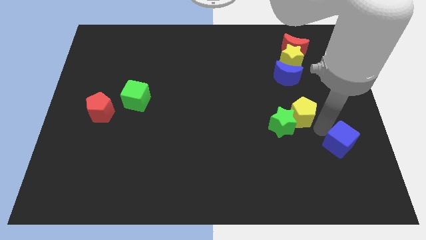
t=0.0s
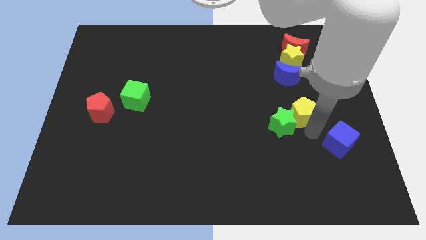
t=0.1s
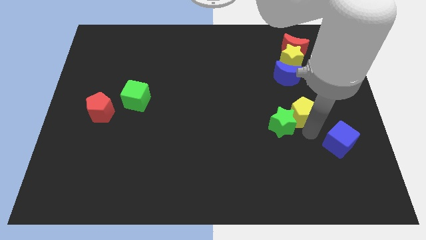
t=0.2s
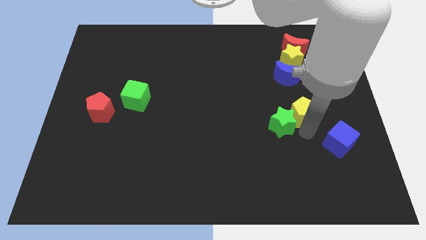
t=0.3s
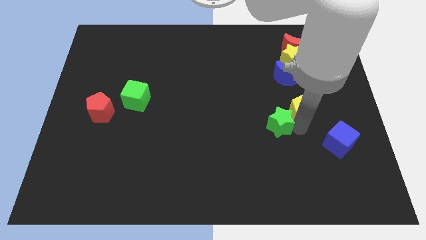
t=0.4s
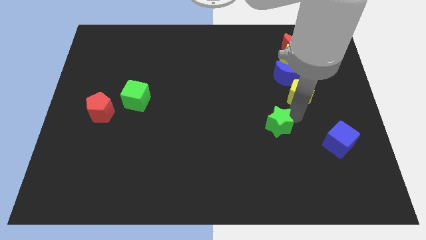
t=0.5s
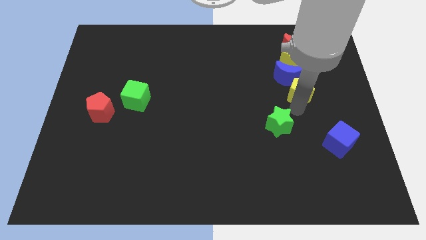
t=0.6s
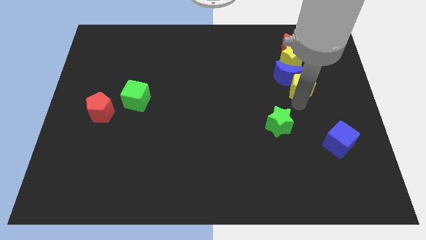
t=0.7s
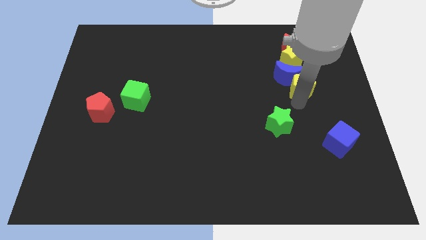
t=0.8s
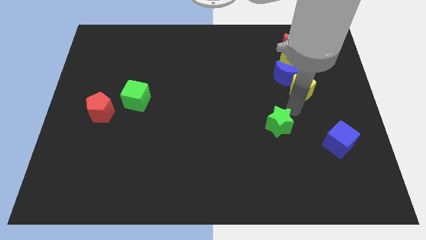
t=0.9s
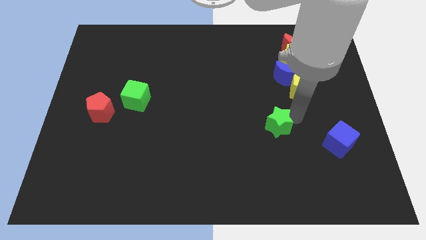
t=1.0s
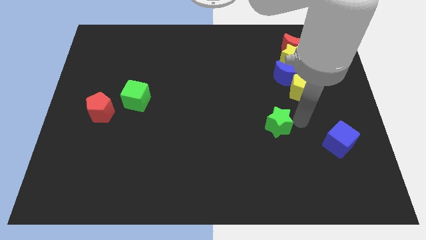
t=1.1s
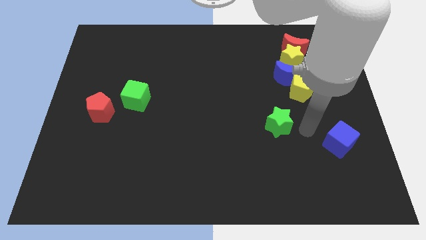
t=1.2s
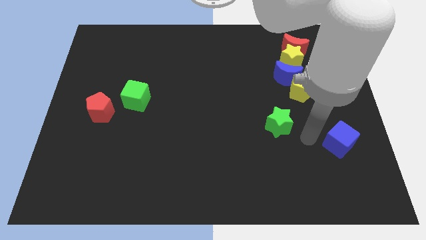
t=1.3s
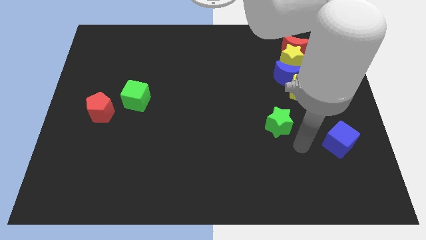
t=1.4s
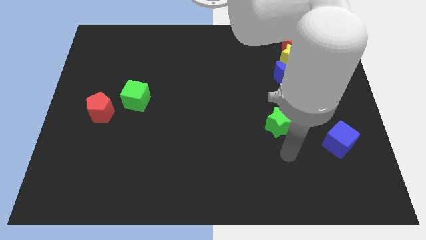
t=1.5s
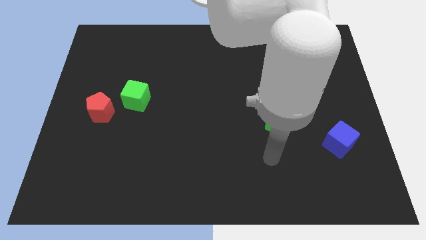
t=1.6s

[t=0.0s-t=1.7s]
place the yellow pentagon in a vertical line

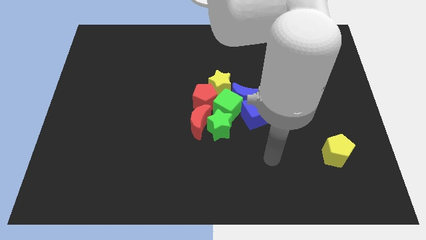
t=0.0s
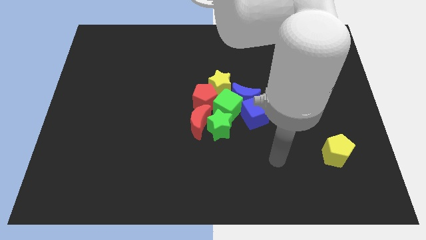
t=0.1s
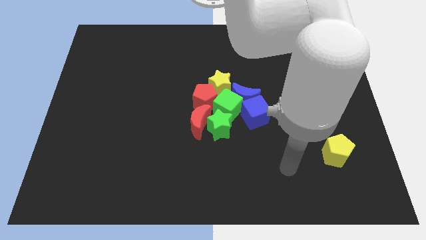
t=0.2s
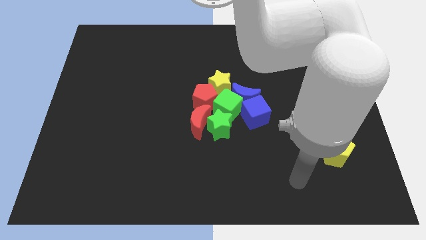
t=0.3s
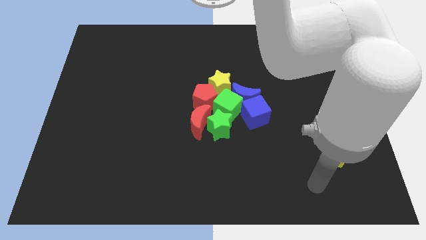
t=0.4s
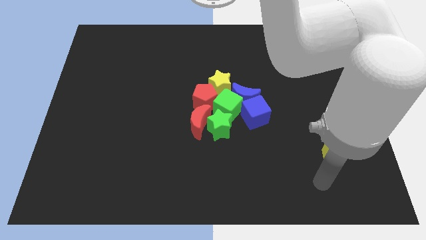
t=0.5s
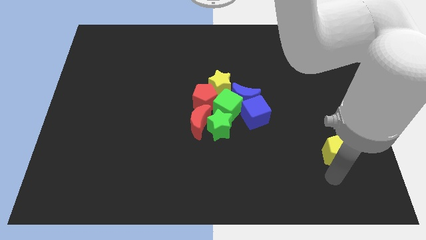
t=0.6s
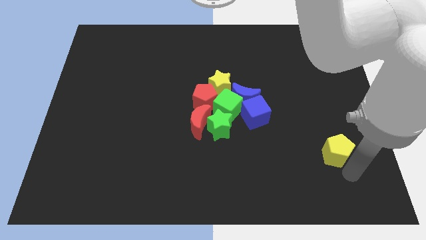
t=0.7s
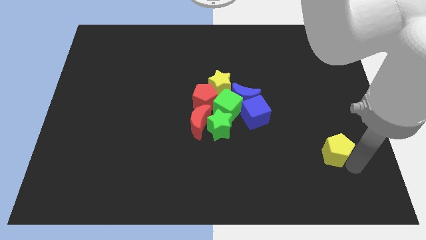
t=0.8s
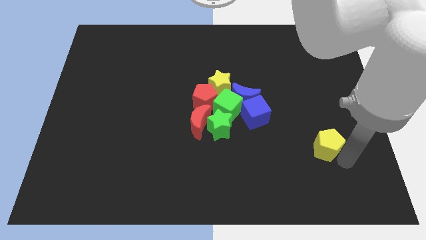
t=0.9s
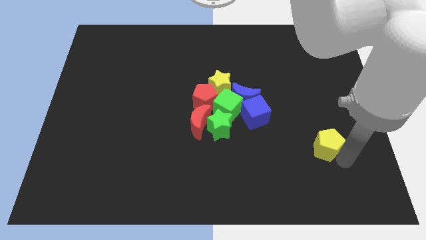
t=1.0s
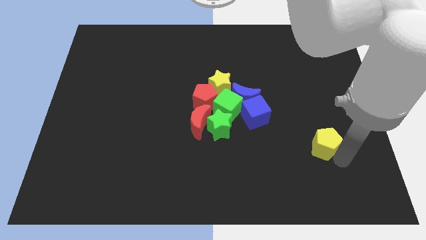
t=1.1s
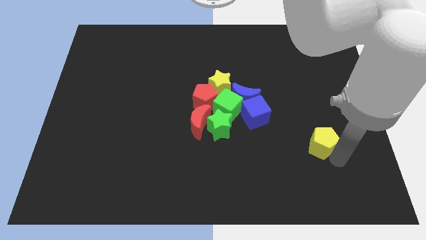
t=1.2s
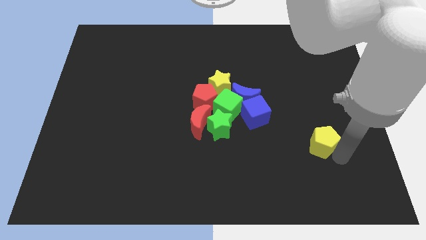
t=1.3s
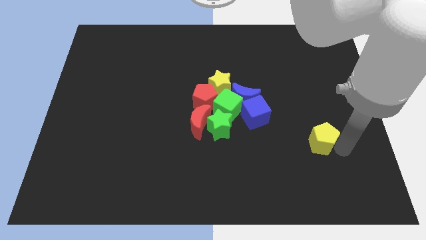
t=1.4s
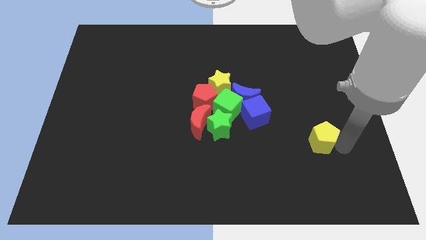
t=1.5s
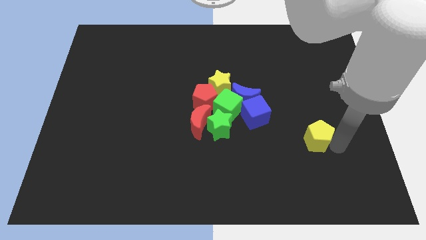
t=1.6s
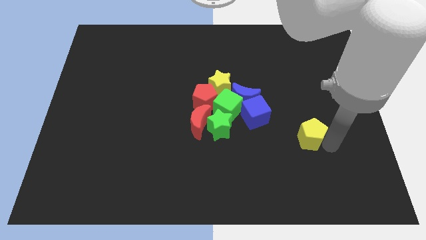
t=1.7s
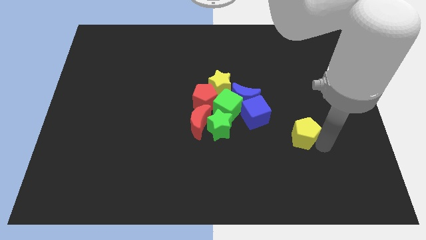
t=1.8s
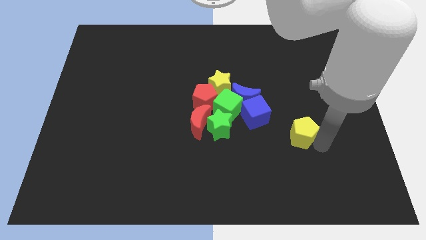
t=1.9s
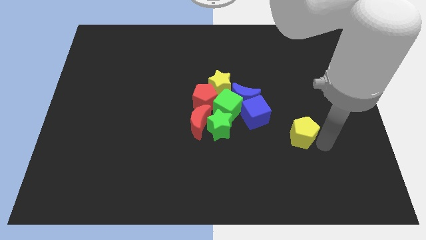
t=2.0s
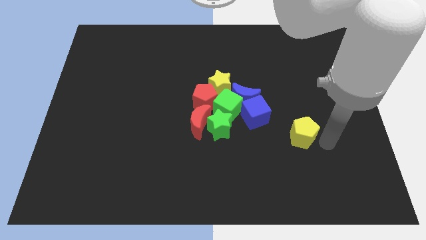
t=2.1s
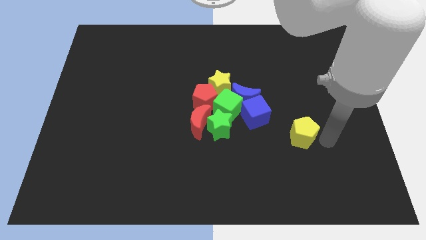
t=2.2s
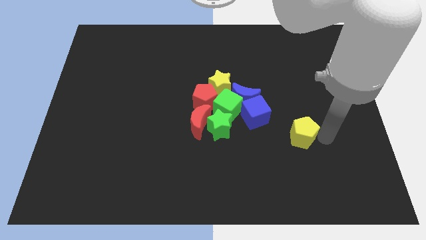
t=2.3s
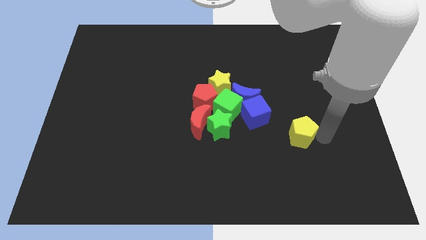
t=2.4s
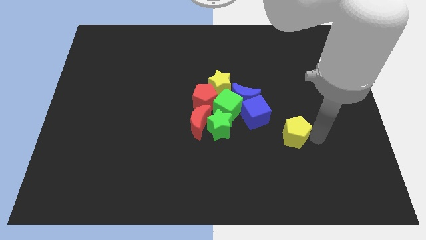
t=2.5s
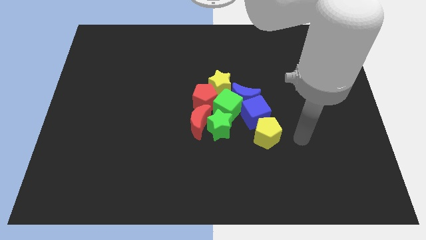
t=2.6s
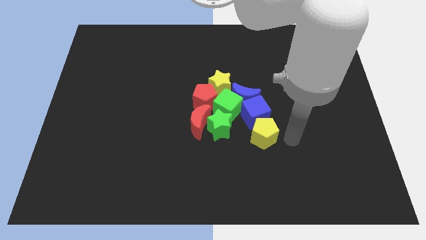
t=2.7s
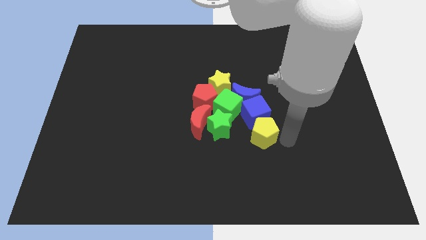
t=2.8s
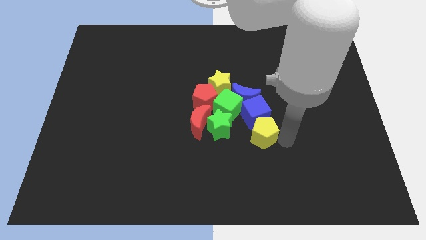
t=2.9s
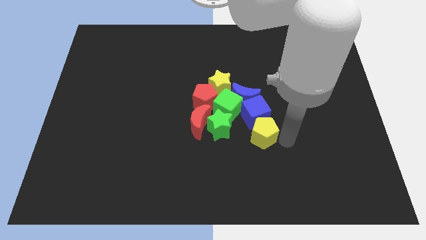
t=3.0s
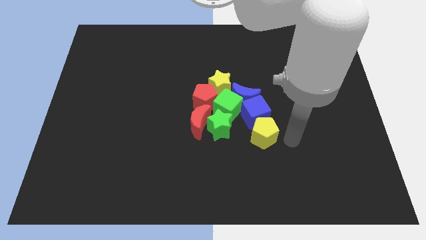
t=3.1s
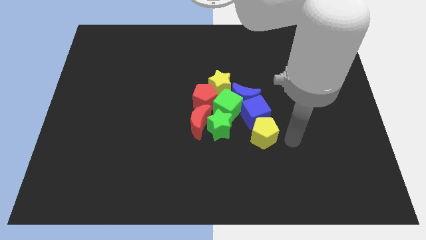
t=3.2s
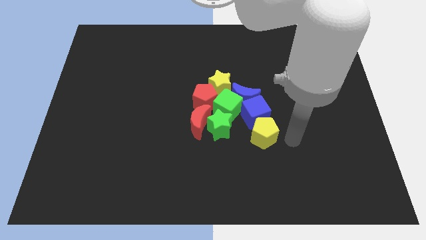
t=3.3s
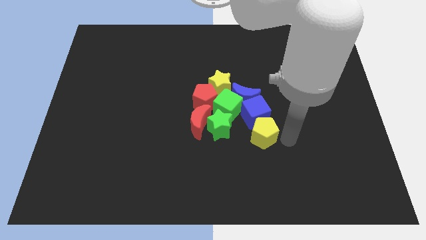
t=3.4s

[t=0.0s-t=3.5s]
move the yellow pentagon below to the blue cube

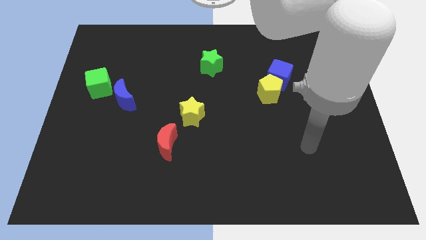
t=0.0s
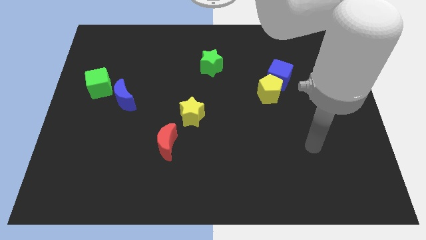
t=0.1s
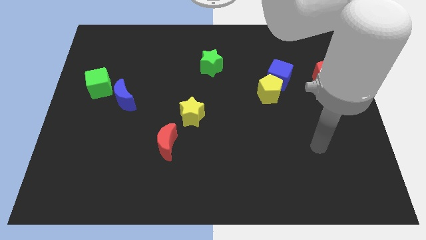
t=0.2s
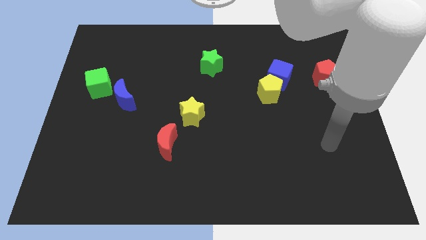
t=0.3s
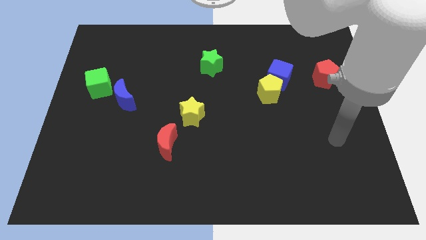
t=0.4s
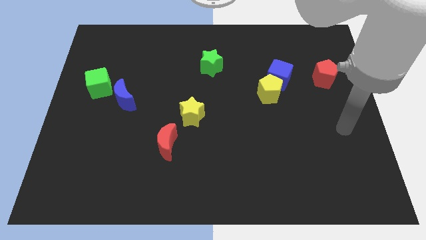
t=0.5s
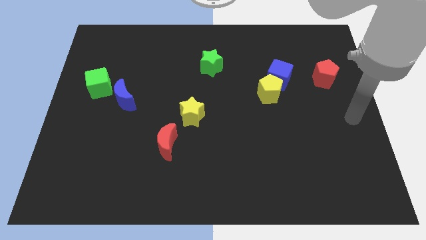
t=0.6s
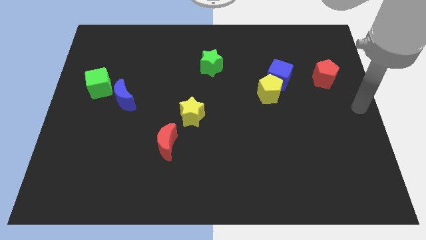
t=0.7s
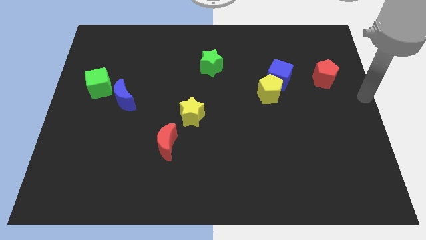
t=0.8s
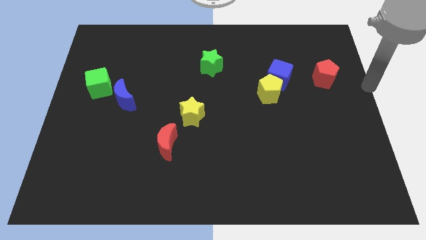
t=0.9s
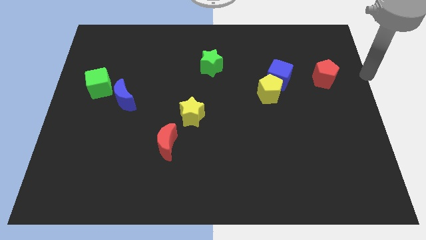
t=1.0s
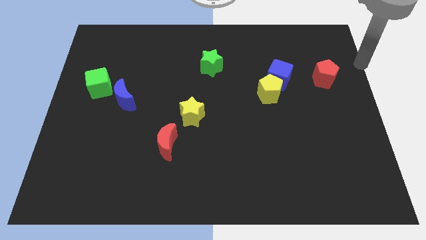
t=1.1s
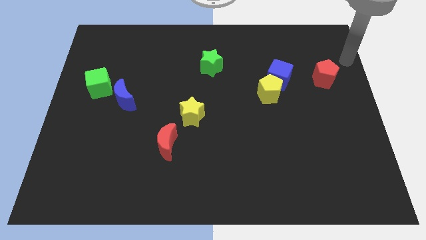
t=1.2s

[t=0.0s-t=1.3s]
place your hand at right side of the red pentagon

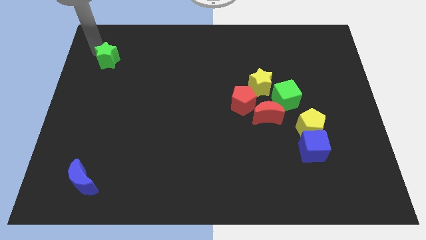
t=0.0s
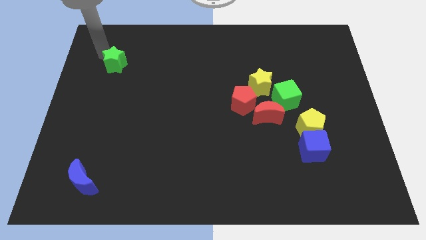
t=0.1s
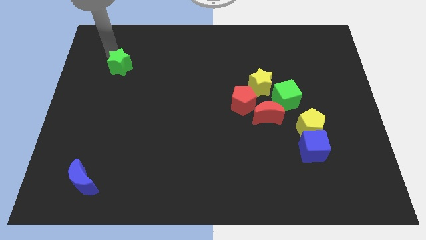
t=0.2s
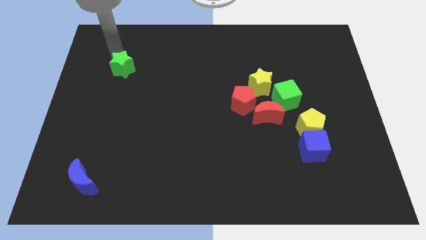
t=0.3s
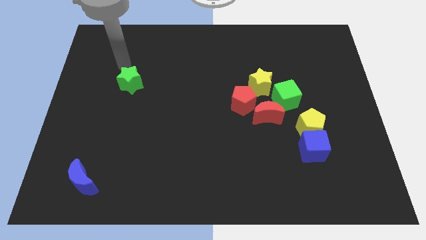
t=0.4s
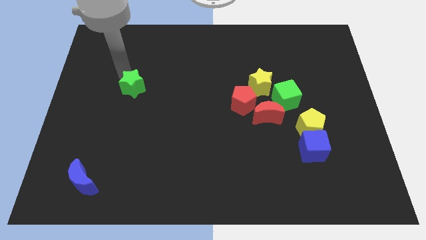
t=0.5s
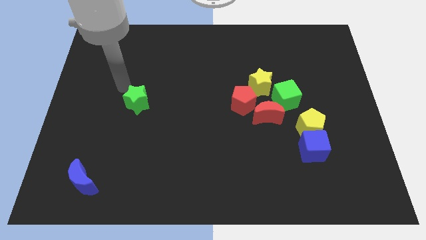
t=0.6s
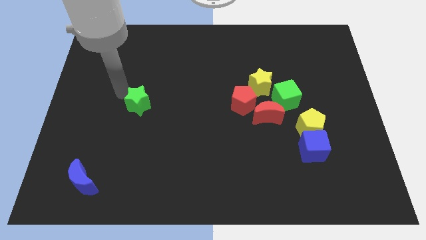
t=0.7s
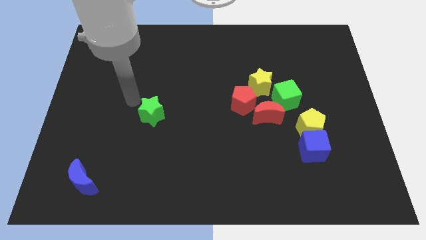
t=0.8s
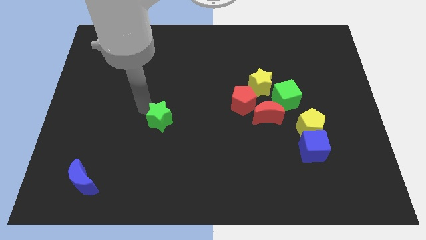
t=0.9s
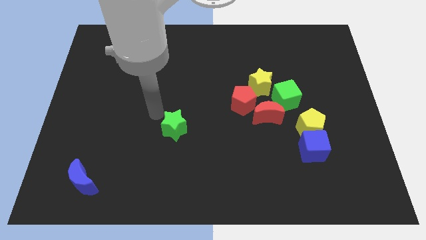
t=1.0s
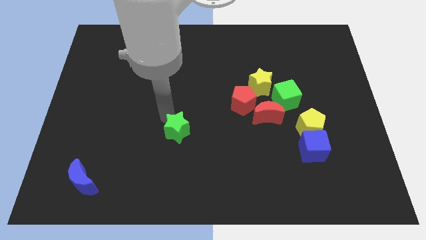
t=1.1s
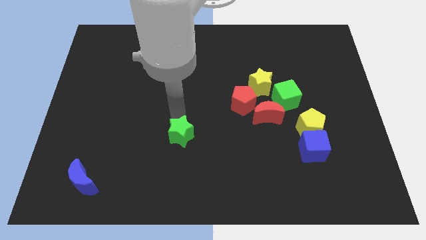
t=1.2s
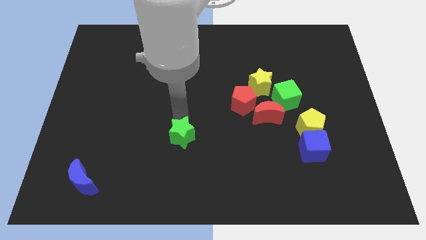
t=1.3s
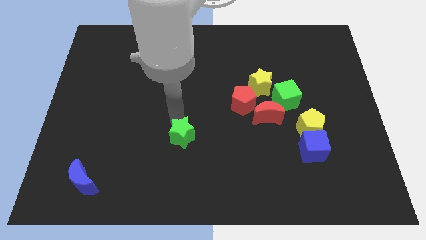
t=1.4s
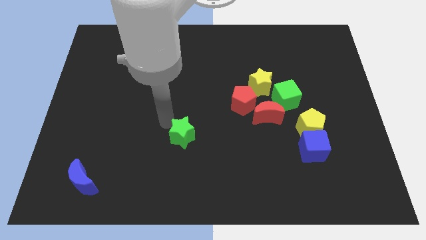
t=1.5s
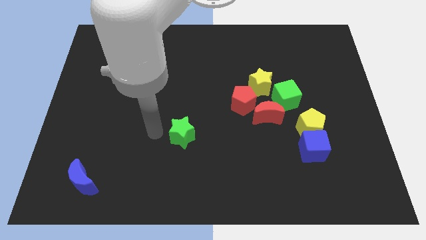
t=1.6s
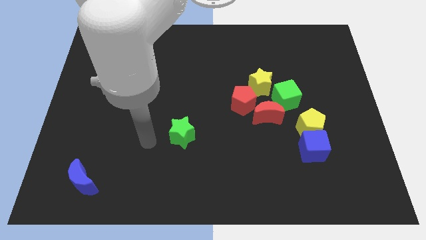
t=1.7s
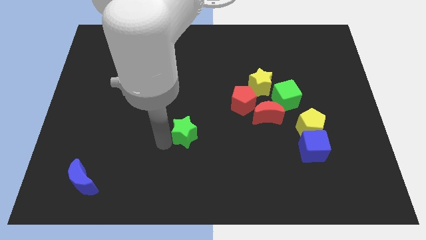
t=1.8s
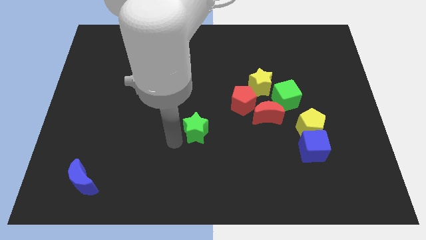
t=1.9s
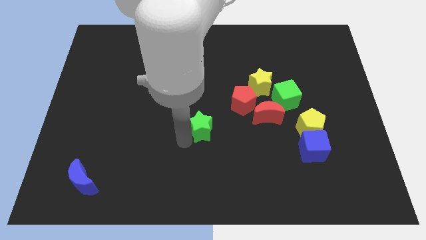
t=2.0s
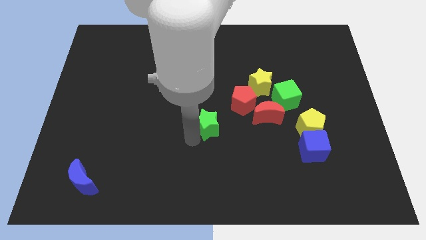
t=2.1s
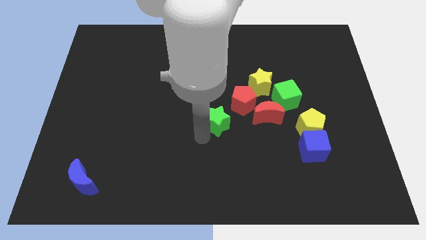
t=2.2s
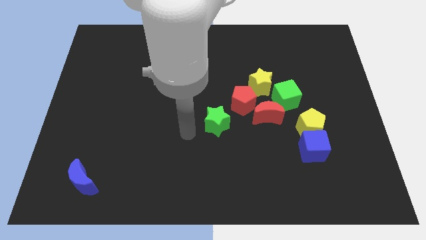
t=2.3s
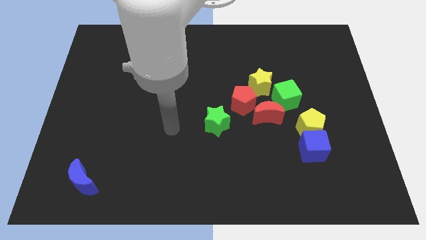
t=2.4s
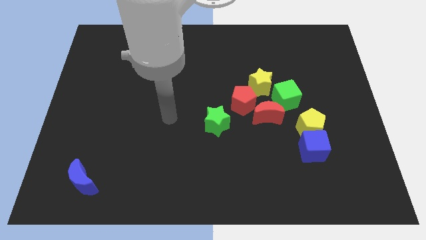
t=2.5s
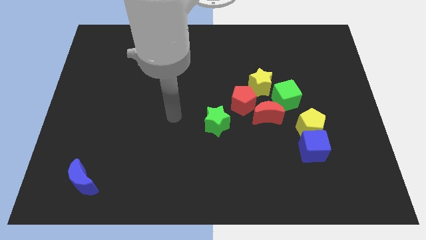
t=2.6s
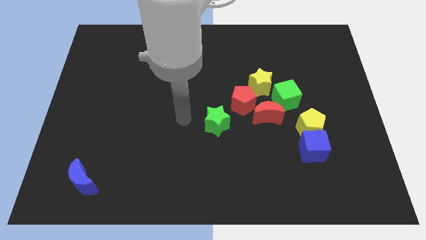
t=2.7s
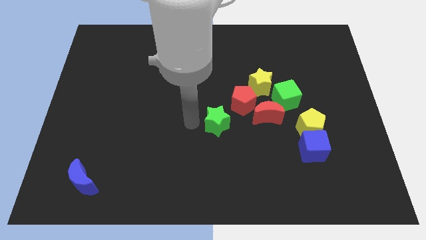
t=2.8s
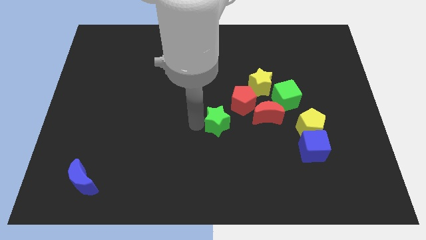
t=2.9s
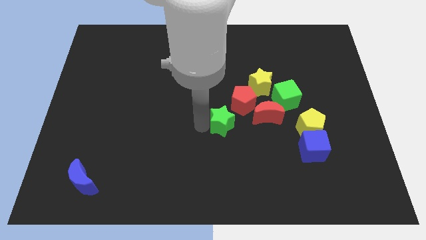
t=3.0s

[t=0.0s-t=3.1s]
place the green star diagonally bottom of red pentagon
